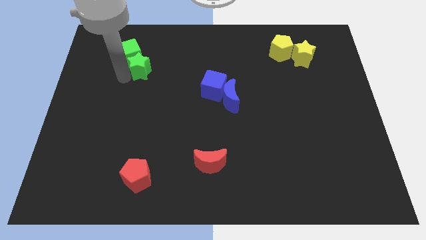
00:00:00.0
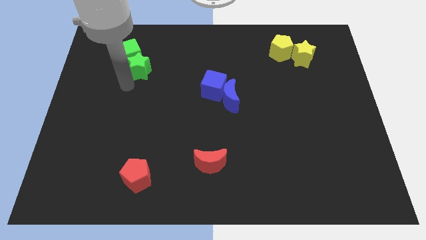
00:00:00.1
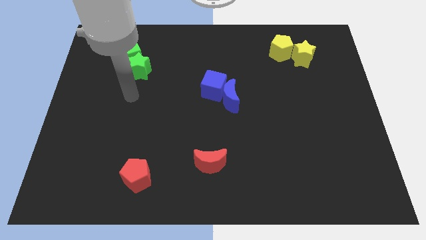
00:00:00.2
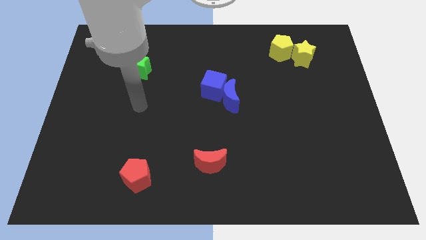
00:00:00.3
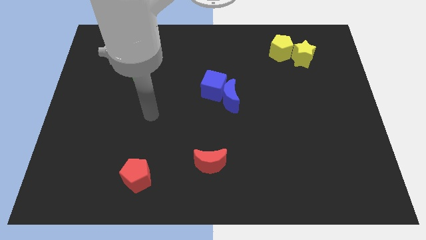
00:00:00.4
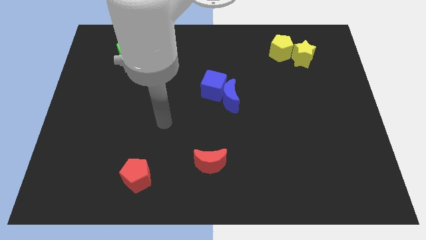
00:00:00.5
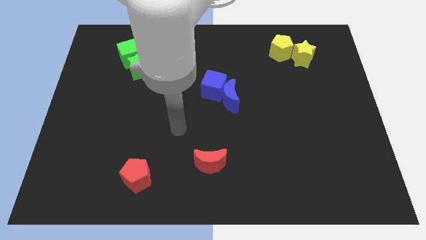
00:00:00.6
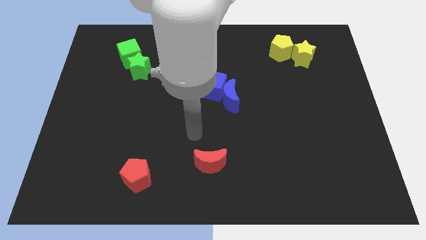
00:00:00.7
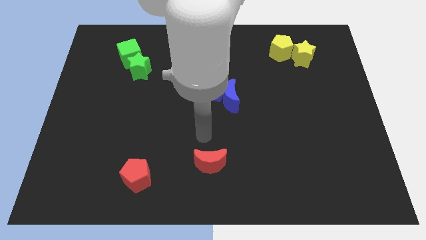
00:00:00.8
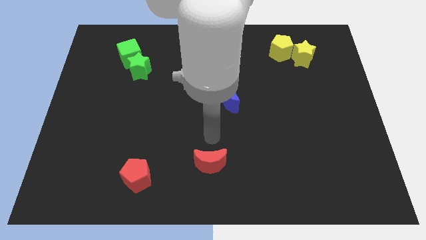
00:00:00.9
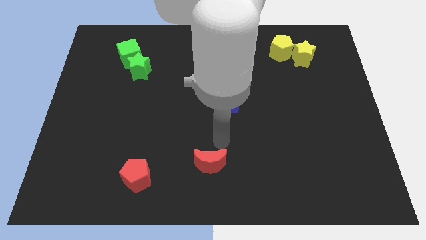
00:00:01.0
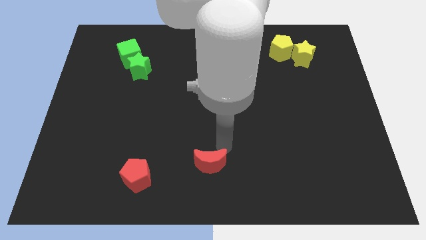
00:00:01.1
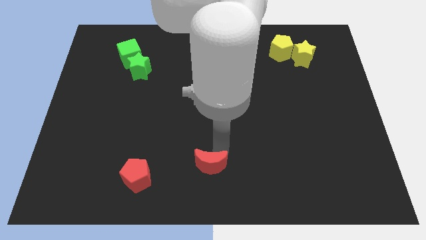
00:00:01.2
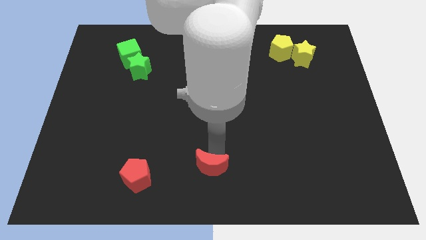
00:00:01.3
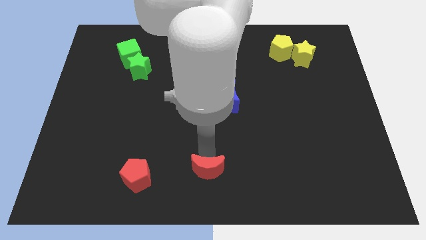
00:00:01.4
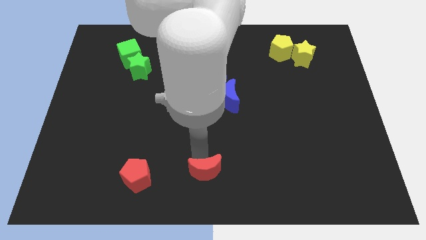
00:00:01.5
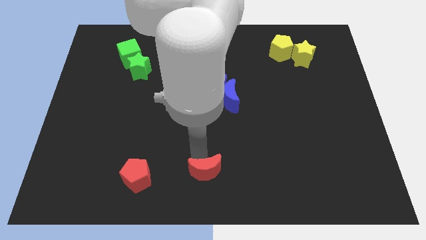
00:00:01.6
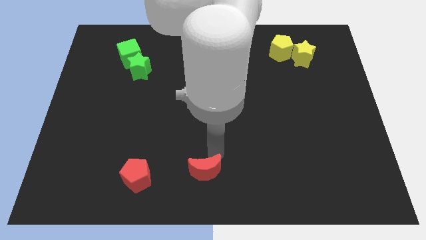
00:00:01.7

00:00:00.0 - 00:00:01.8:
move the arm into the red moon

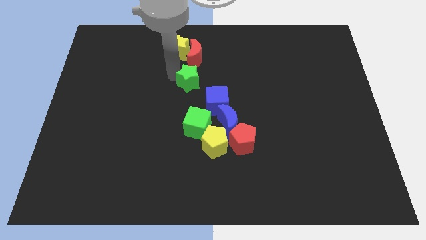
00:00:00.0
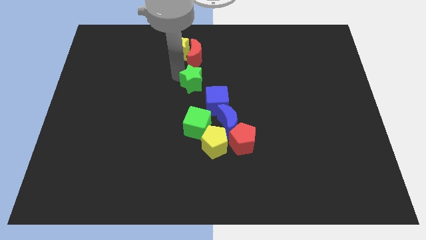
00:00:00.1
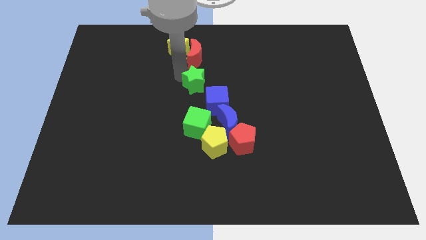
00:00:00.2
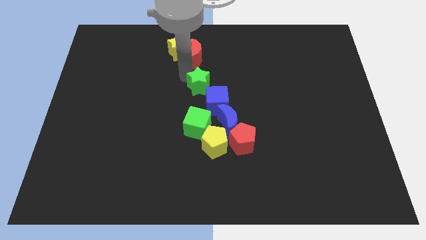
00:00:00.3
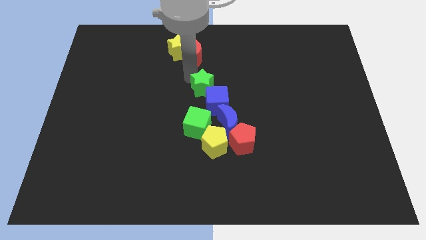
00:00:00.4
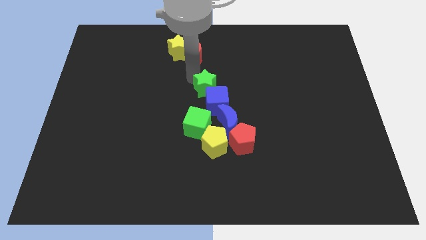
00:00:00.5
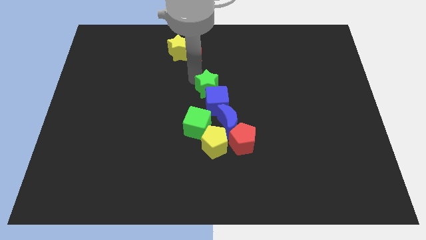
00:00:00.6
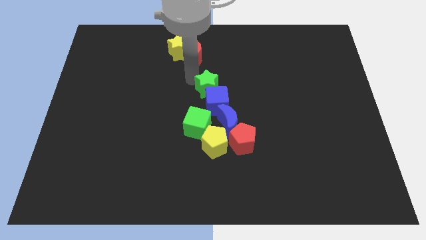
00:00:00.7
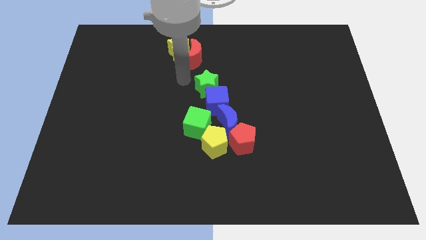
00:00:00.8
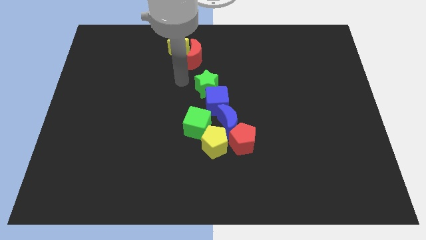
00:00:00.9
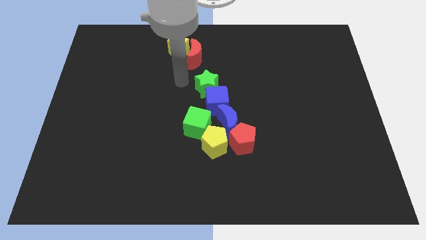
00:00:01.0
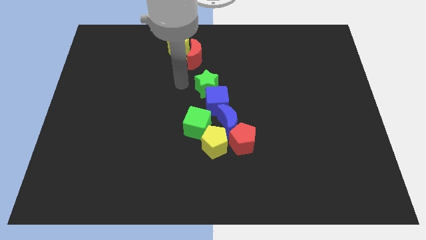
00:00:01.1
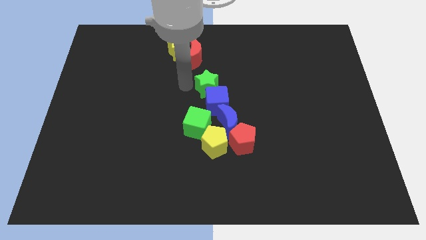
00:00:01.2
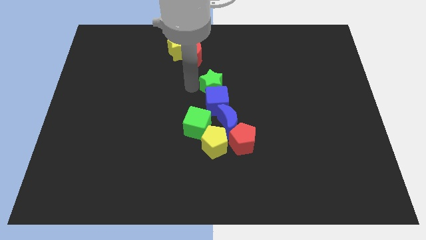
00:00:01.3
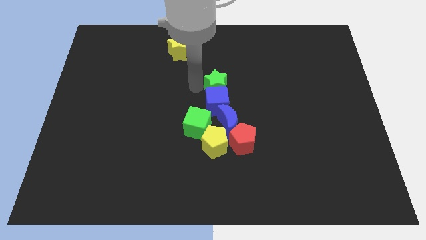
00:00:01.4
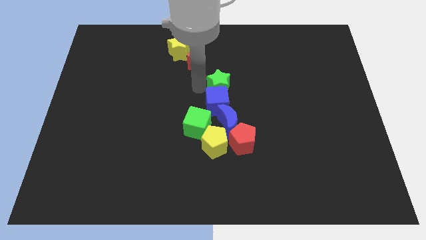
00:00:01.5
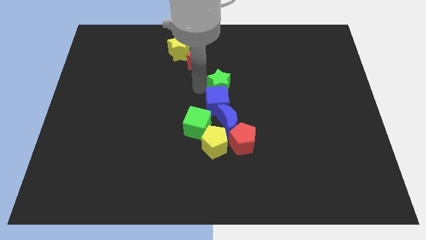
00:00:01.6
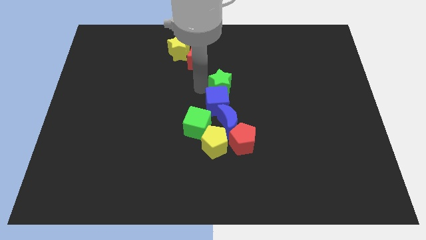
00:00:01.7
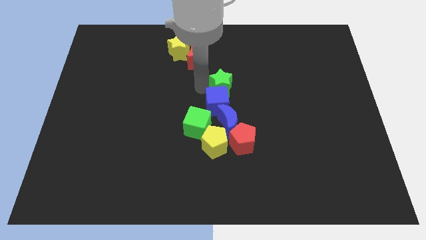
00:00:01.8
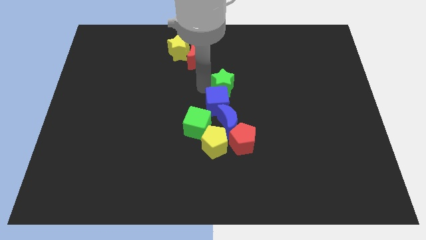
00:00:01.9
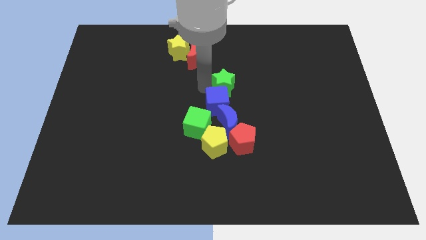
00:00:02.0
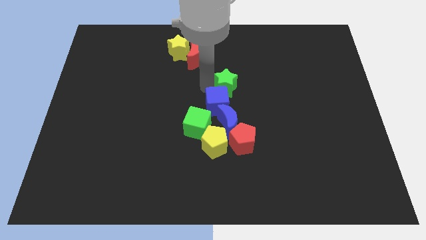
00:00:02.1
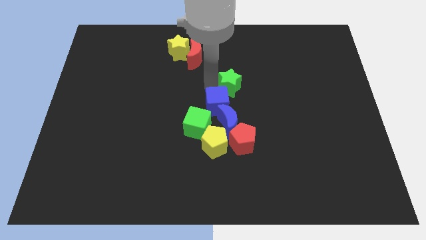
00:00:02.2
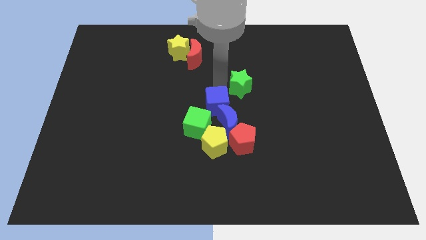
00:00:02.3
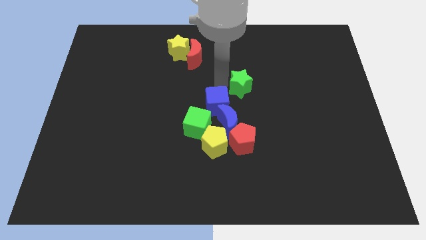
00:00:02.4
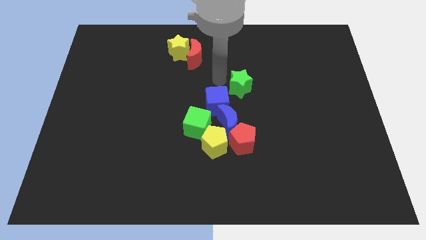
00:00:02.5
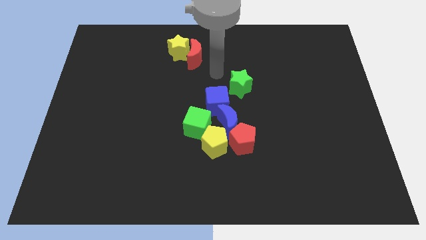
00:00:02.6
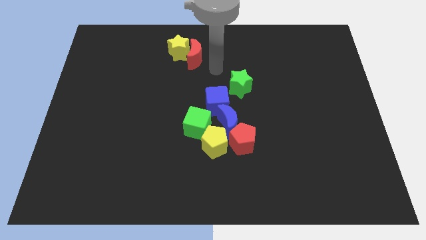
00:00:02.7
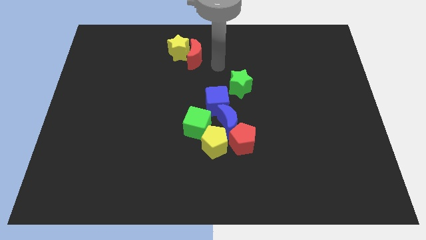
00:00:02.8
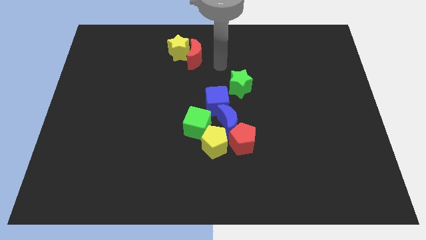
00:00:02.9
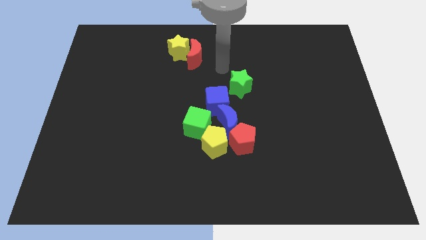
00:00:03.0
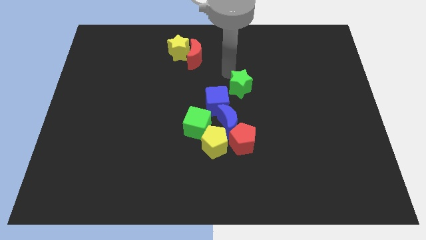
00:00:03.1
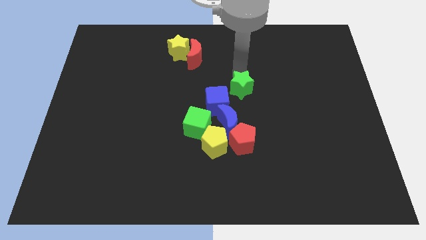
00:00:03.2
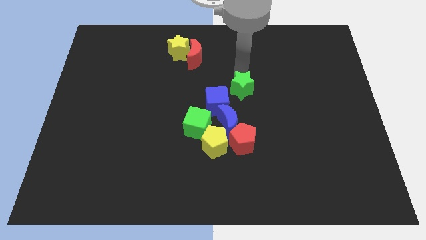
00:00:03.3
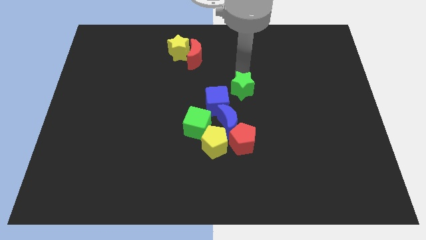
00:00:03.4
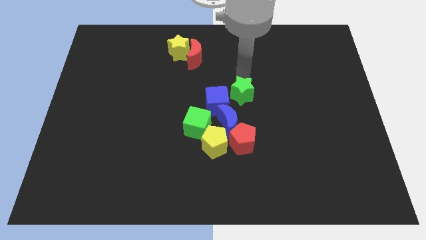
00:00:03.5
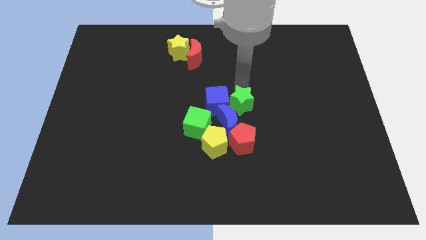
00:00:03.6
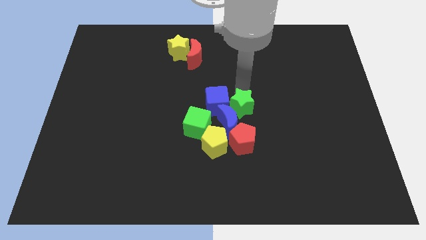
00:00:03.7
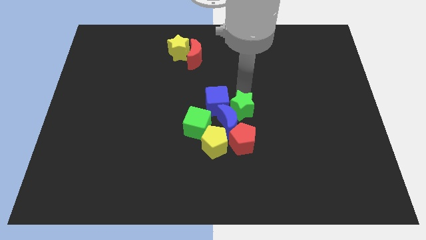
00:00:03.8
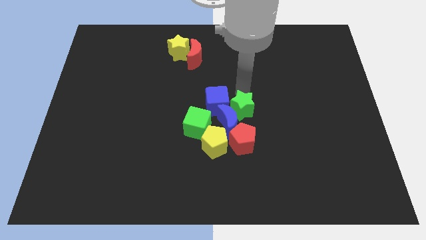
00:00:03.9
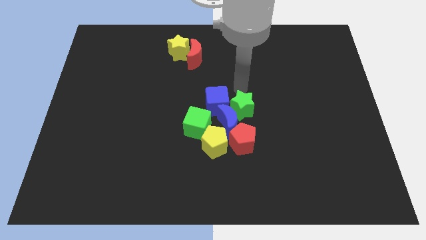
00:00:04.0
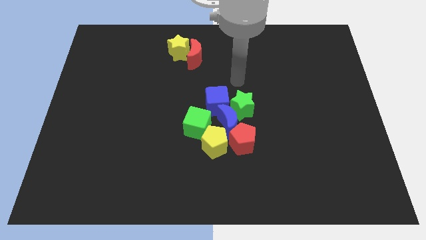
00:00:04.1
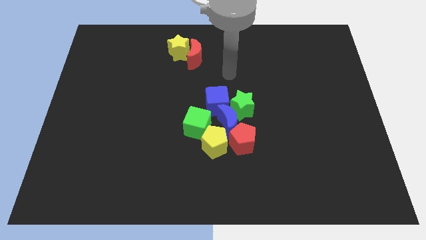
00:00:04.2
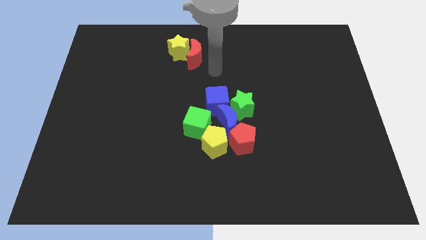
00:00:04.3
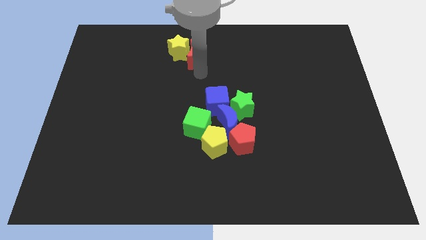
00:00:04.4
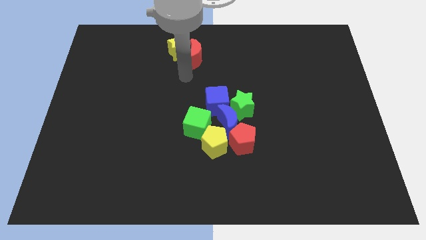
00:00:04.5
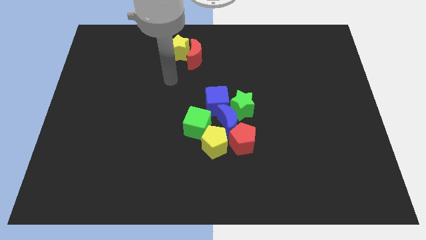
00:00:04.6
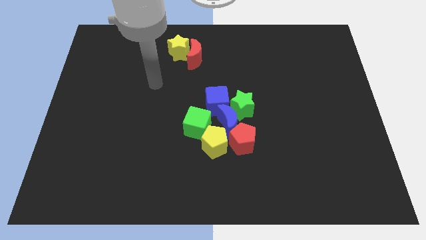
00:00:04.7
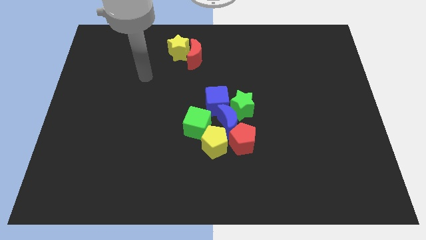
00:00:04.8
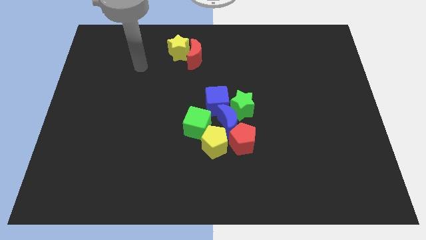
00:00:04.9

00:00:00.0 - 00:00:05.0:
push the green star to the right of the blue crescent

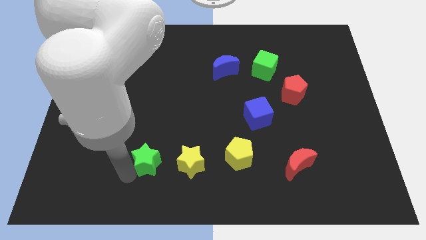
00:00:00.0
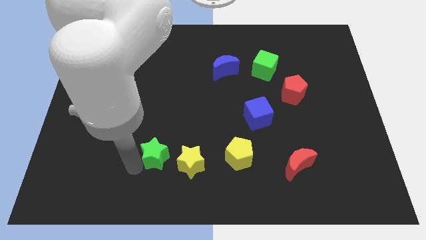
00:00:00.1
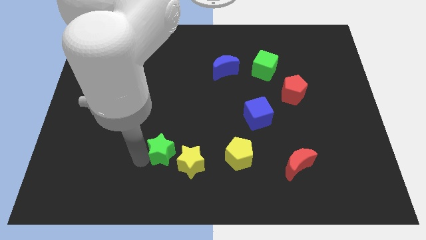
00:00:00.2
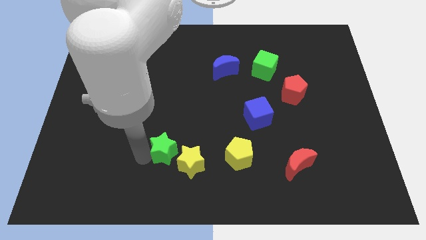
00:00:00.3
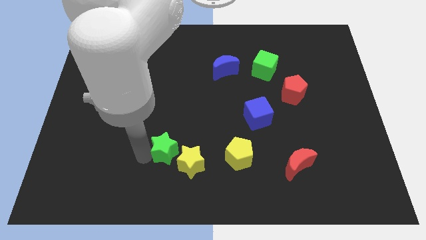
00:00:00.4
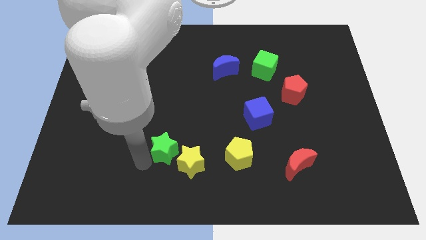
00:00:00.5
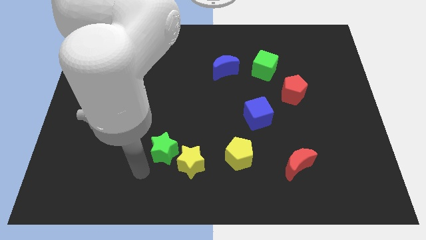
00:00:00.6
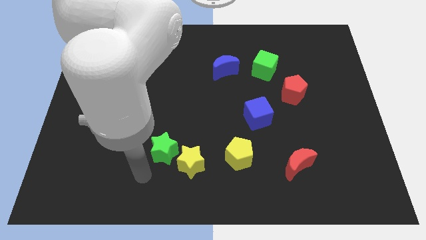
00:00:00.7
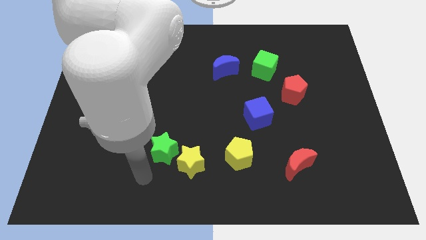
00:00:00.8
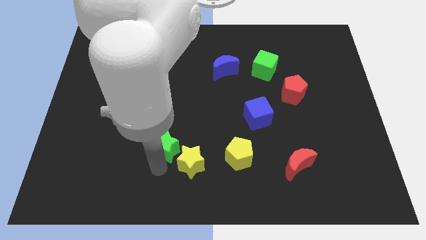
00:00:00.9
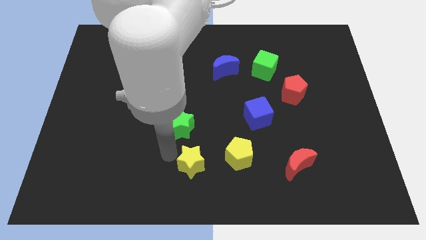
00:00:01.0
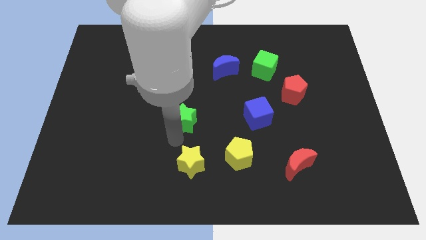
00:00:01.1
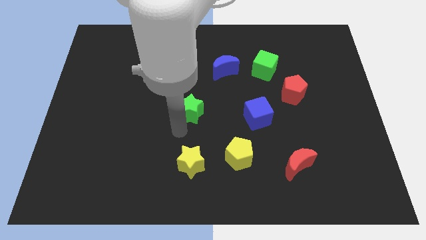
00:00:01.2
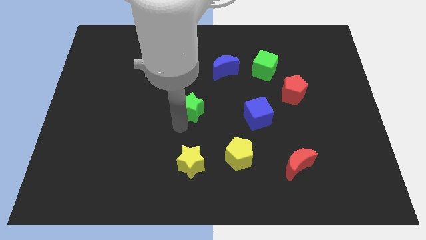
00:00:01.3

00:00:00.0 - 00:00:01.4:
push the green star on top of the yellow star

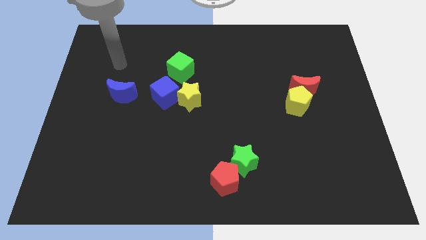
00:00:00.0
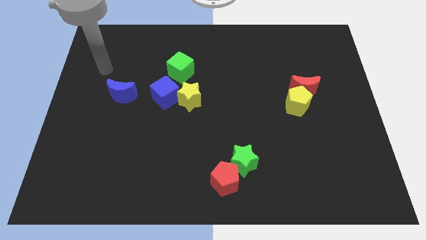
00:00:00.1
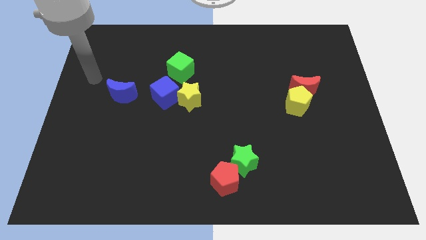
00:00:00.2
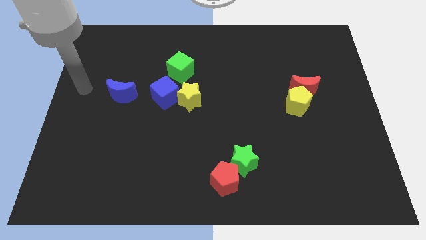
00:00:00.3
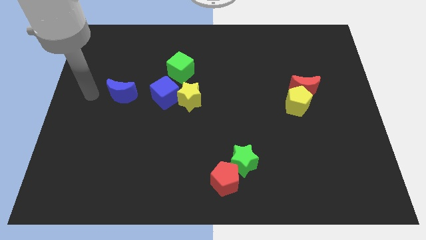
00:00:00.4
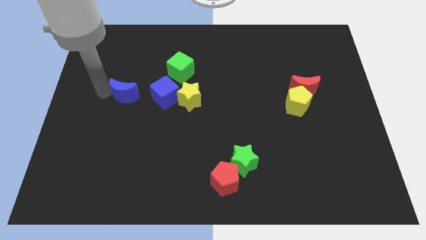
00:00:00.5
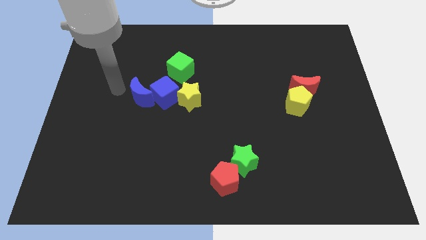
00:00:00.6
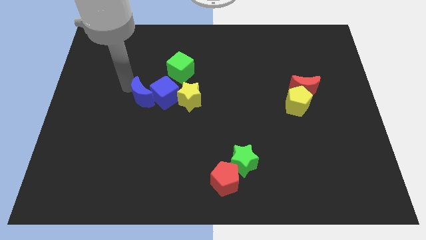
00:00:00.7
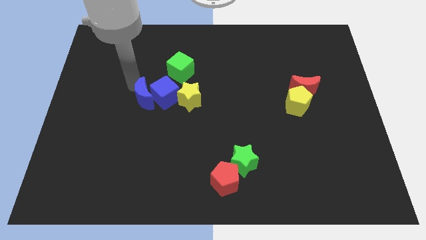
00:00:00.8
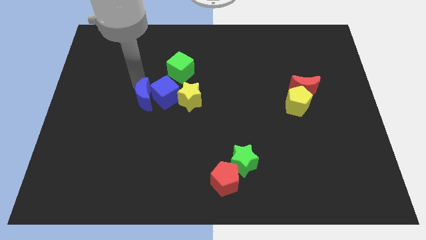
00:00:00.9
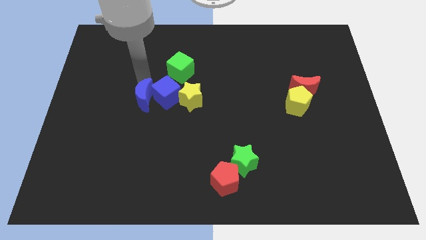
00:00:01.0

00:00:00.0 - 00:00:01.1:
move the blue moon in to blue cube
